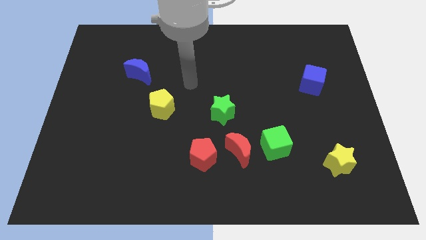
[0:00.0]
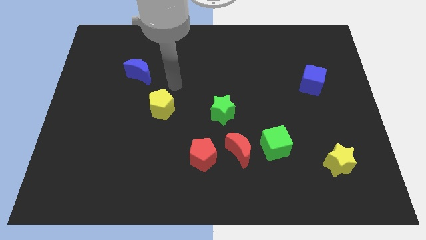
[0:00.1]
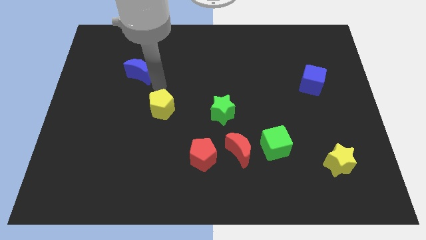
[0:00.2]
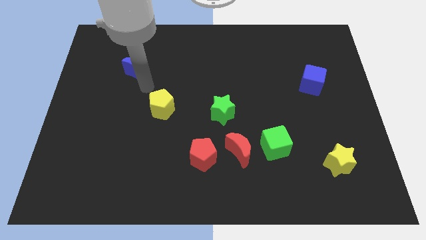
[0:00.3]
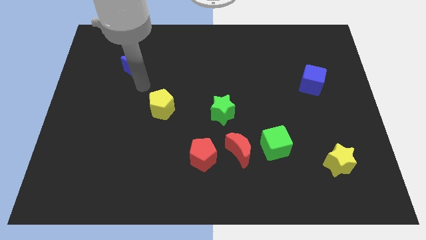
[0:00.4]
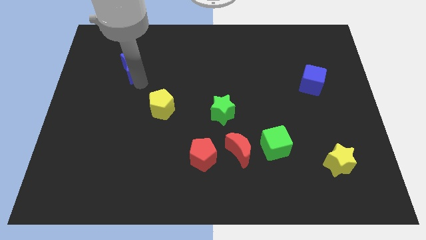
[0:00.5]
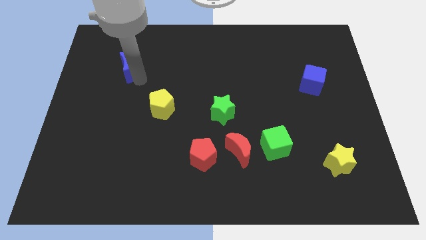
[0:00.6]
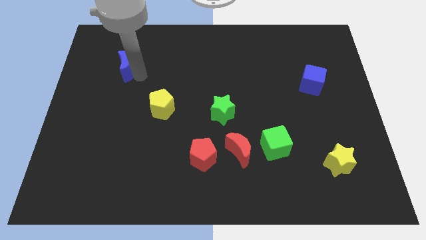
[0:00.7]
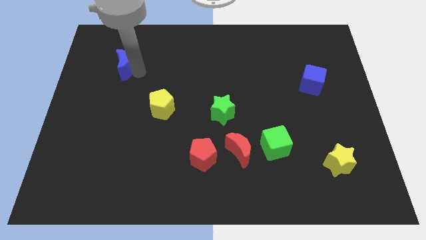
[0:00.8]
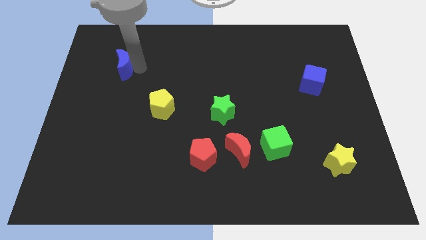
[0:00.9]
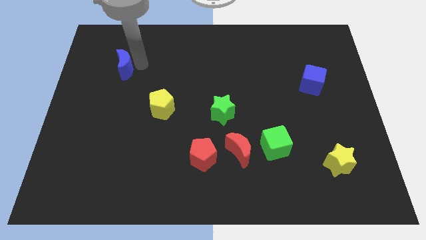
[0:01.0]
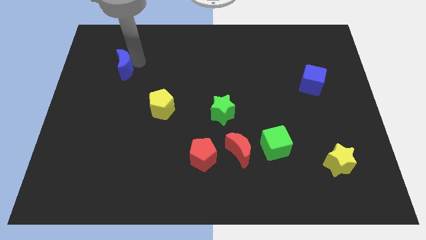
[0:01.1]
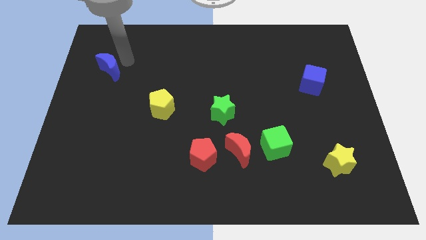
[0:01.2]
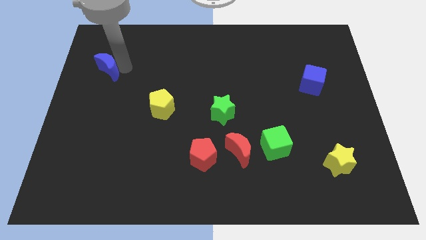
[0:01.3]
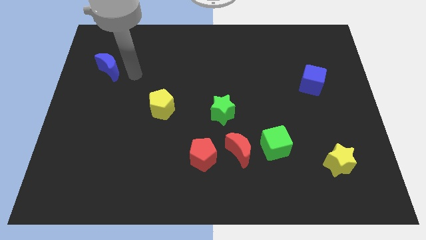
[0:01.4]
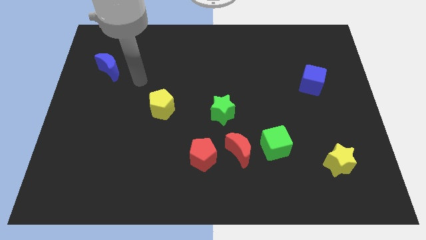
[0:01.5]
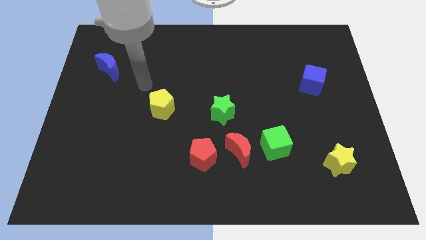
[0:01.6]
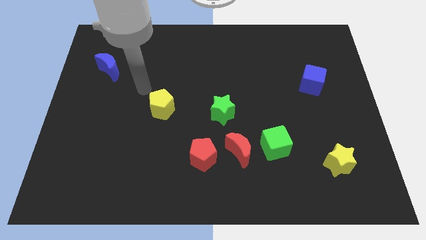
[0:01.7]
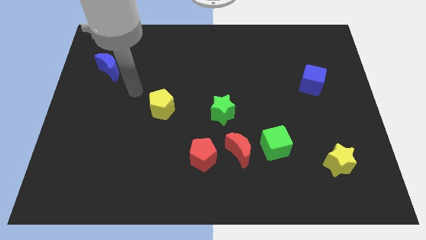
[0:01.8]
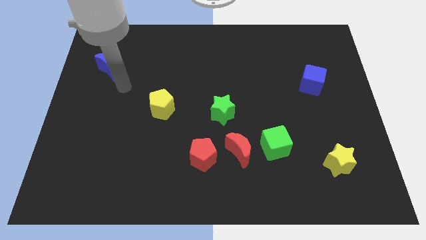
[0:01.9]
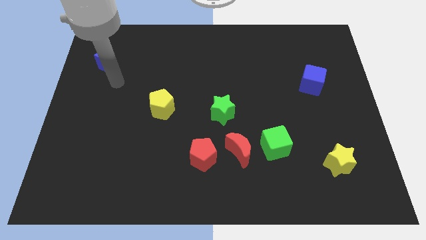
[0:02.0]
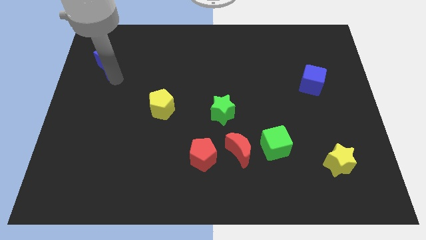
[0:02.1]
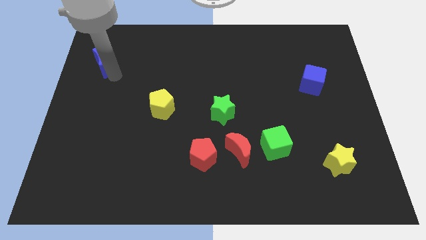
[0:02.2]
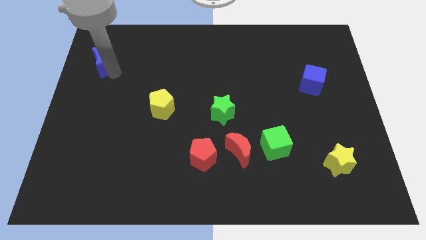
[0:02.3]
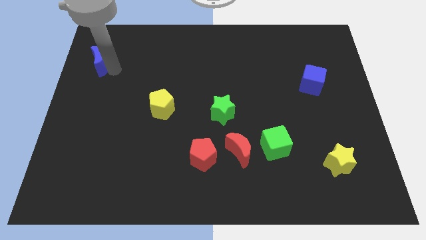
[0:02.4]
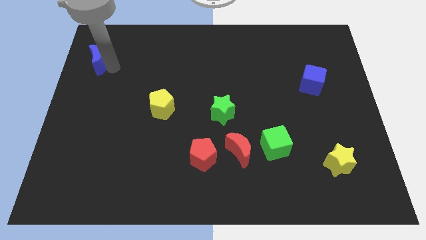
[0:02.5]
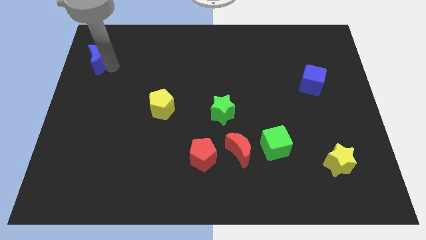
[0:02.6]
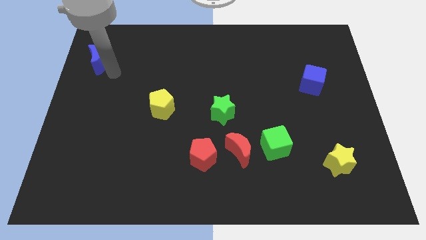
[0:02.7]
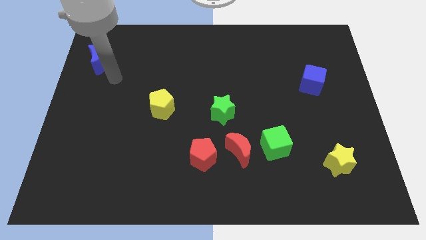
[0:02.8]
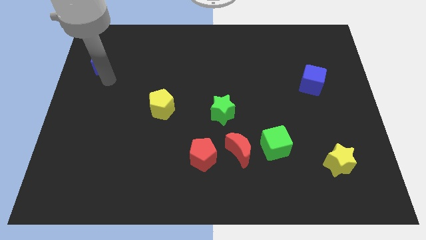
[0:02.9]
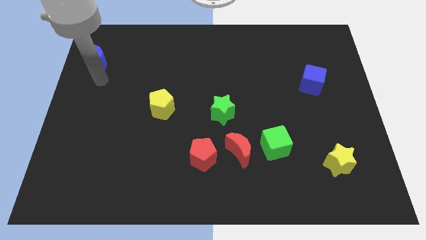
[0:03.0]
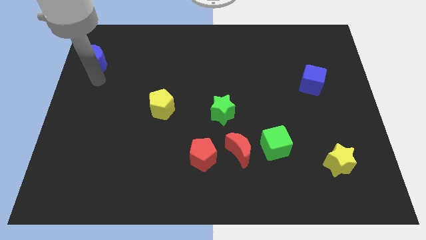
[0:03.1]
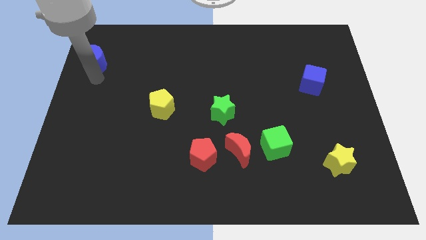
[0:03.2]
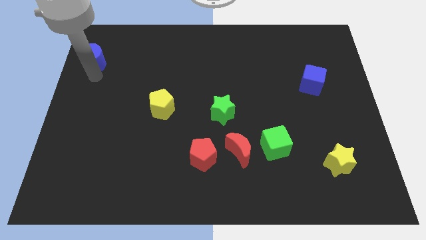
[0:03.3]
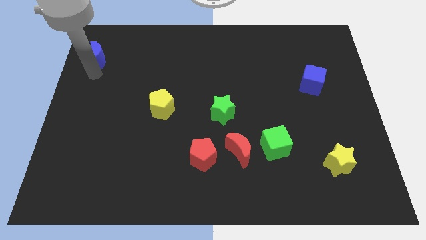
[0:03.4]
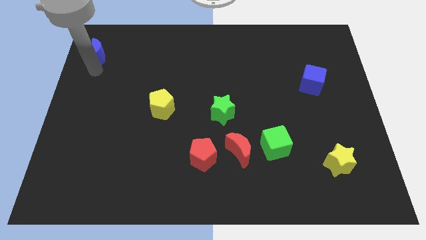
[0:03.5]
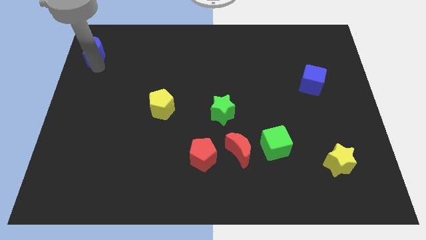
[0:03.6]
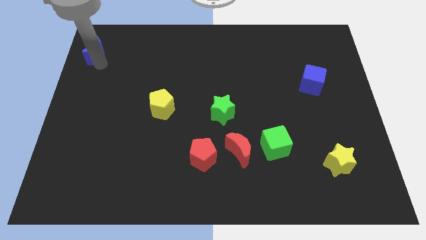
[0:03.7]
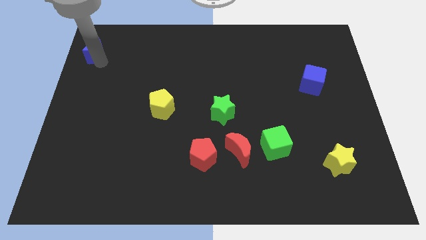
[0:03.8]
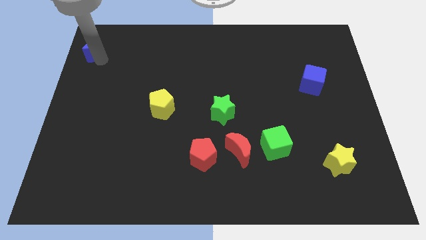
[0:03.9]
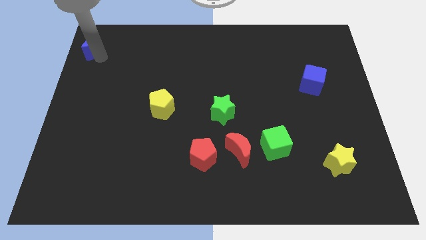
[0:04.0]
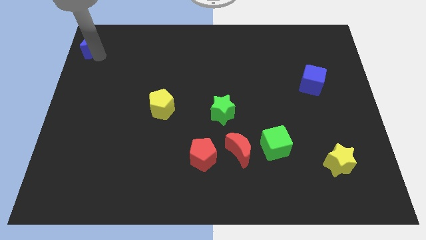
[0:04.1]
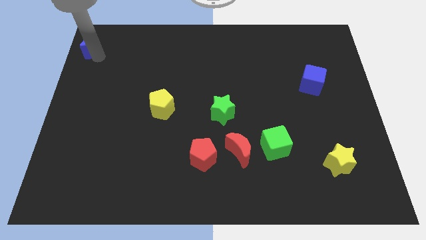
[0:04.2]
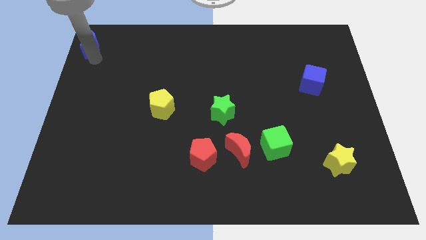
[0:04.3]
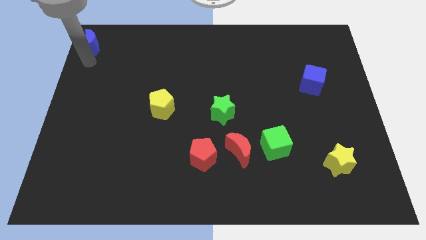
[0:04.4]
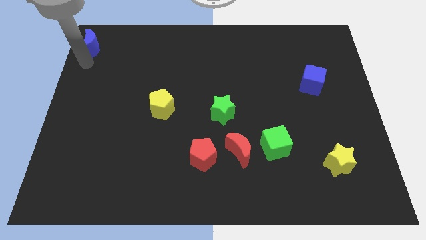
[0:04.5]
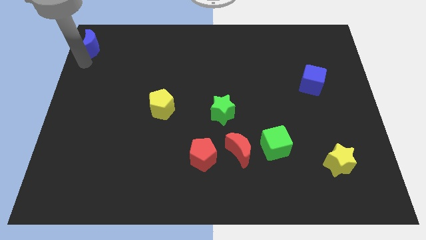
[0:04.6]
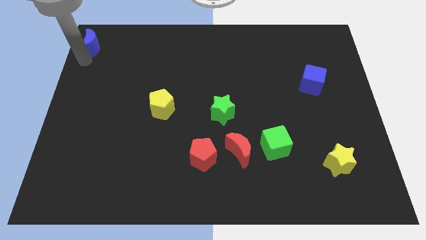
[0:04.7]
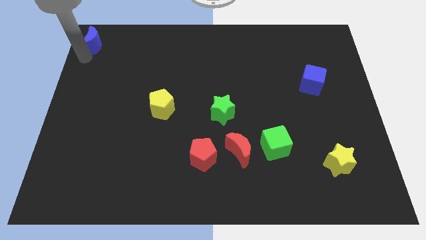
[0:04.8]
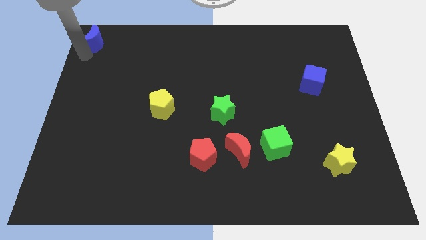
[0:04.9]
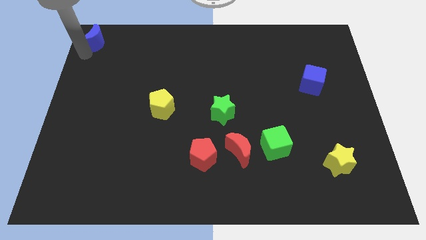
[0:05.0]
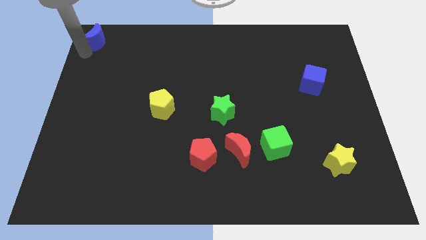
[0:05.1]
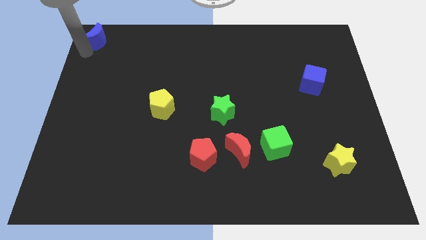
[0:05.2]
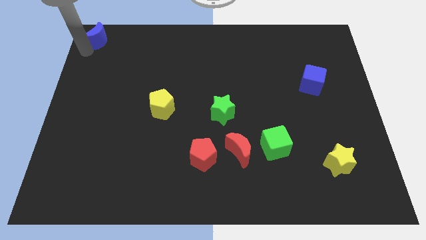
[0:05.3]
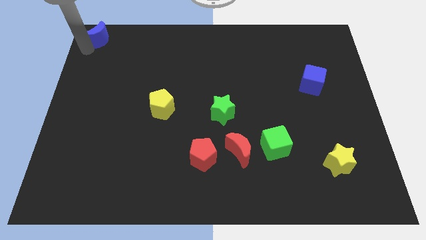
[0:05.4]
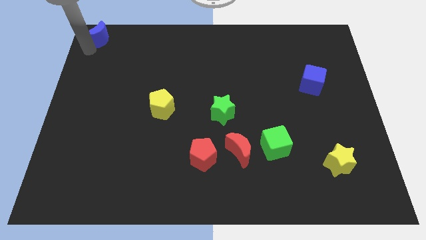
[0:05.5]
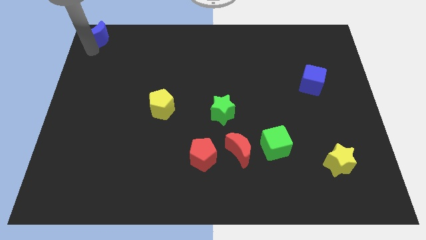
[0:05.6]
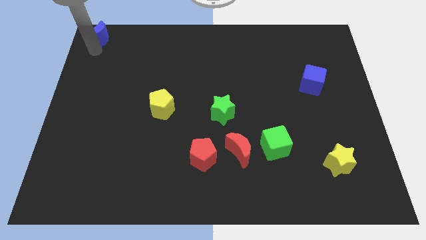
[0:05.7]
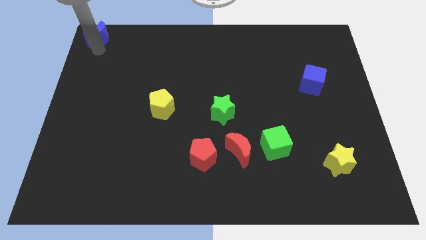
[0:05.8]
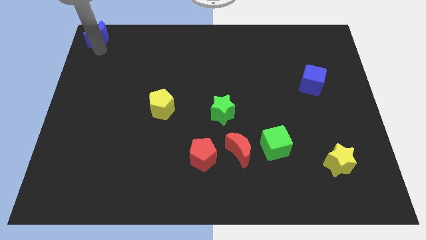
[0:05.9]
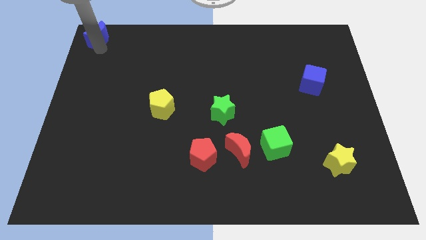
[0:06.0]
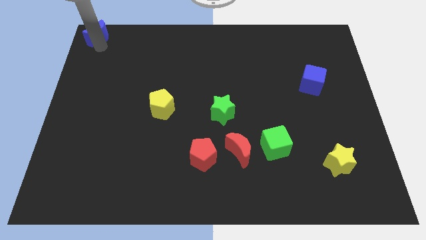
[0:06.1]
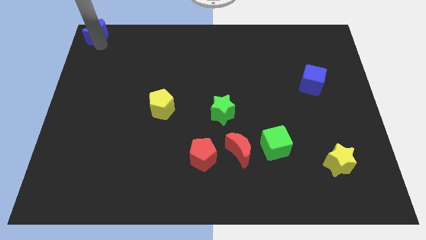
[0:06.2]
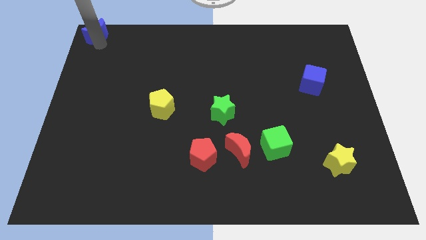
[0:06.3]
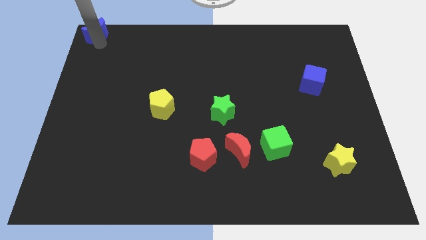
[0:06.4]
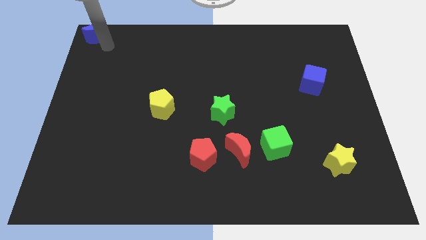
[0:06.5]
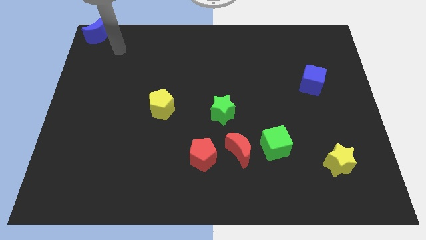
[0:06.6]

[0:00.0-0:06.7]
push the blue crescent to the top left corner of the board

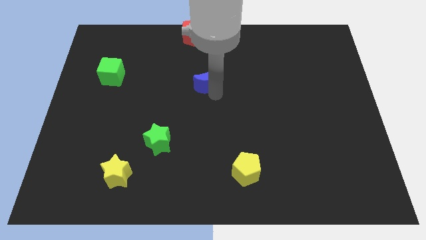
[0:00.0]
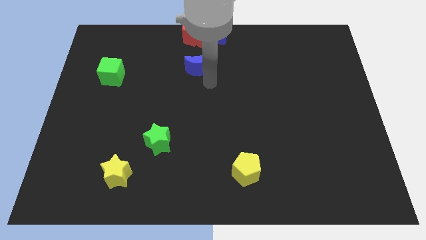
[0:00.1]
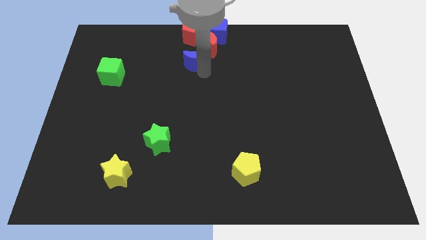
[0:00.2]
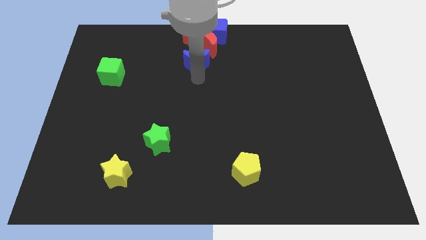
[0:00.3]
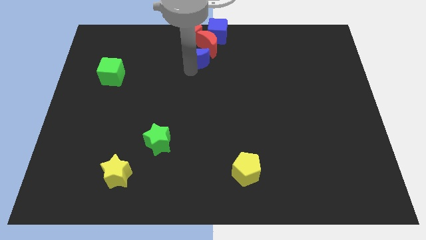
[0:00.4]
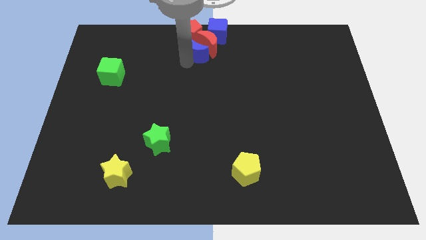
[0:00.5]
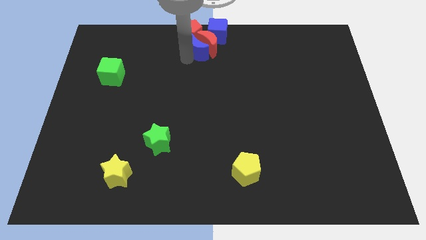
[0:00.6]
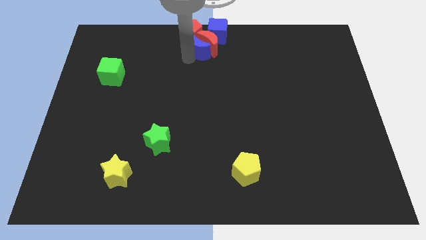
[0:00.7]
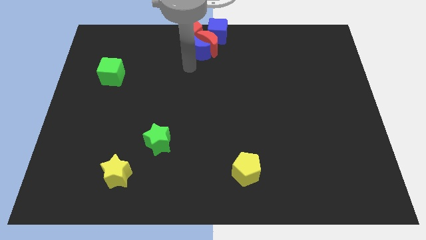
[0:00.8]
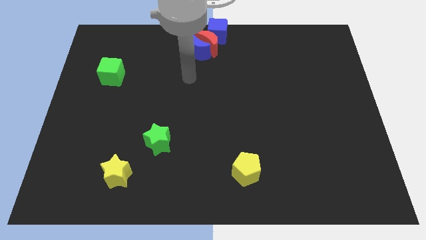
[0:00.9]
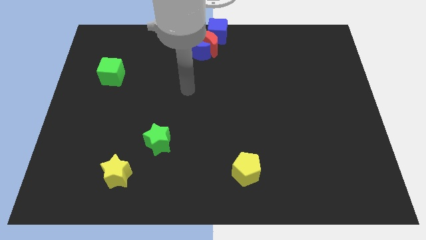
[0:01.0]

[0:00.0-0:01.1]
drag the blue crescent towards the group of blocks

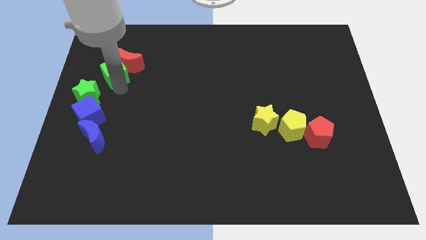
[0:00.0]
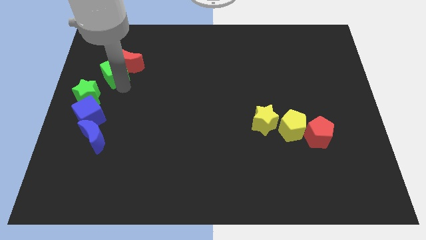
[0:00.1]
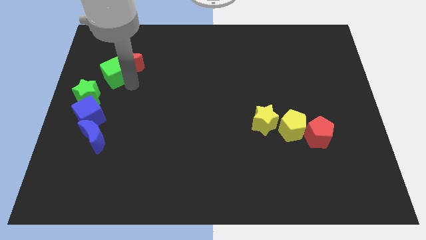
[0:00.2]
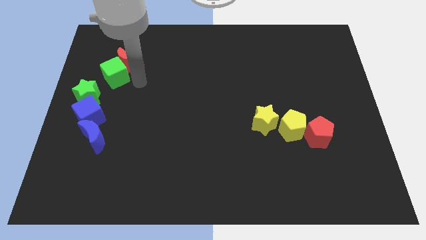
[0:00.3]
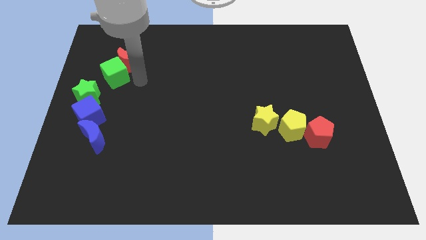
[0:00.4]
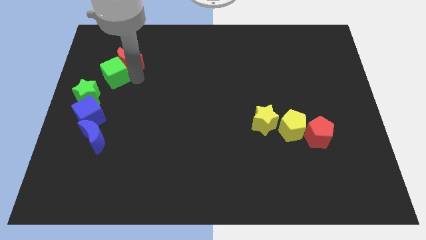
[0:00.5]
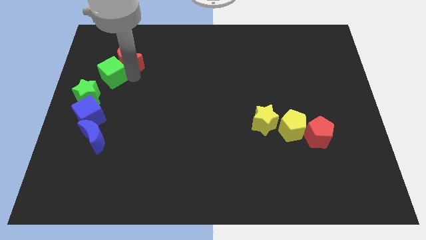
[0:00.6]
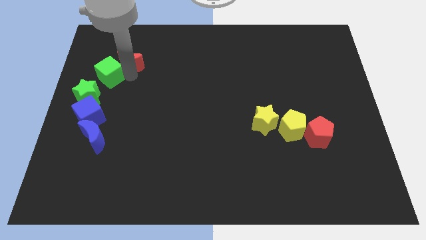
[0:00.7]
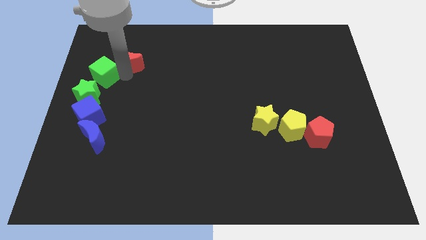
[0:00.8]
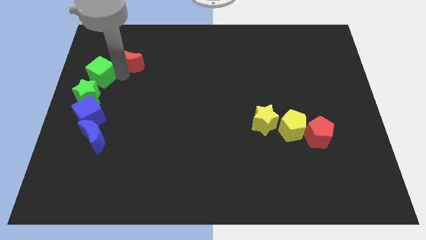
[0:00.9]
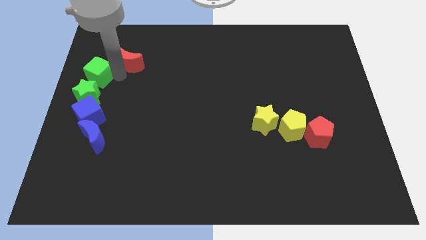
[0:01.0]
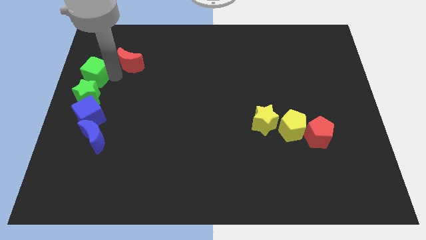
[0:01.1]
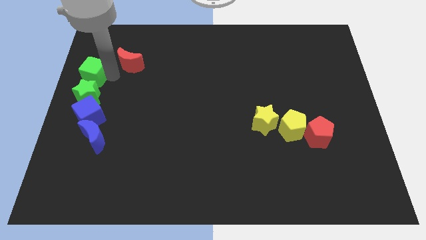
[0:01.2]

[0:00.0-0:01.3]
move the green cube to the top of the green star
